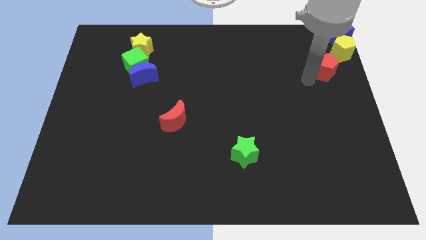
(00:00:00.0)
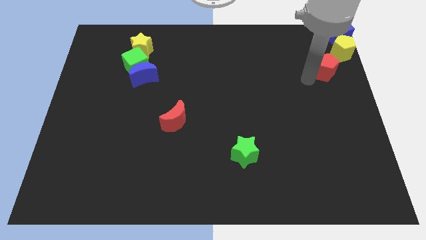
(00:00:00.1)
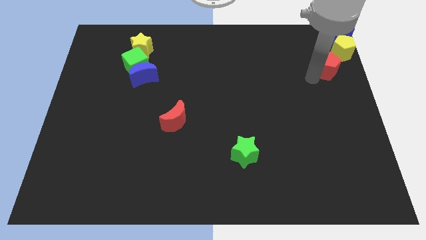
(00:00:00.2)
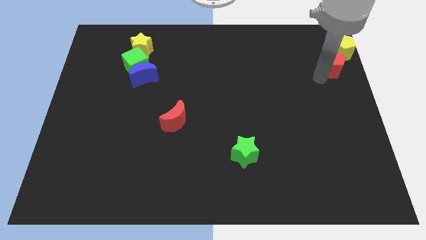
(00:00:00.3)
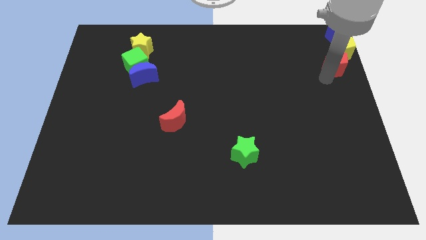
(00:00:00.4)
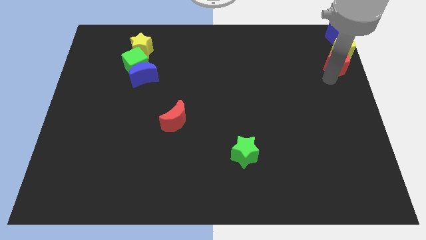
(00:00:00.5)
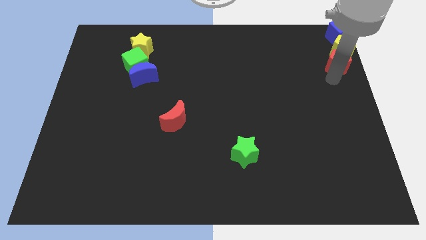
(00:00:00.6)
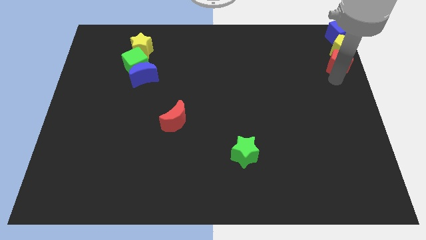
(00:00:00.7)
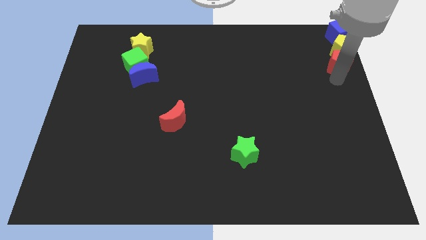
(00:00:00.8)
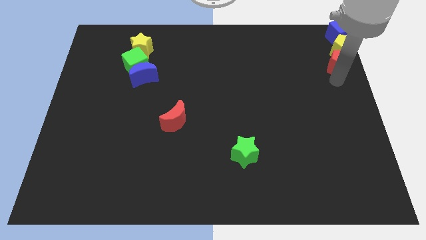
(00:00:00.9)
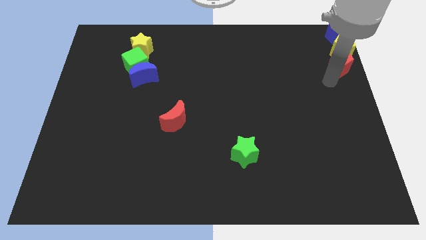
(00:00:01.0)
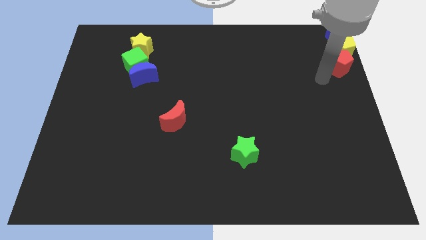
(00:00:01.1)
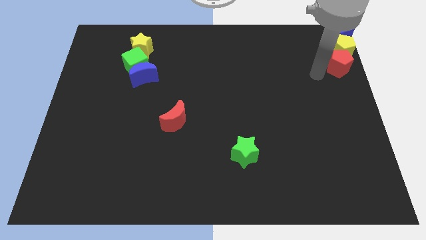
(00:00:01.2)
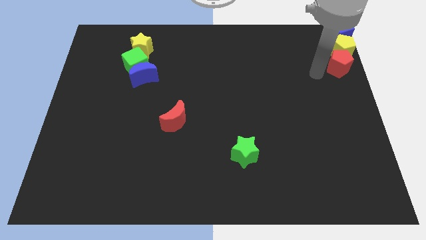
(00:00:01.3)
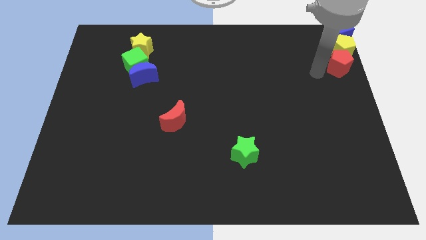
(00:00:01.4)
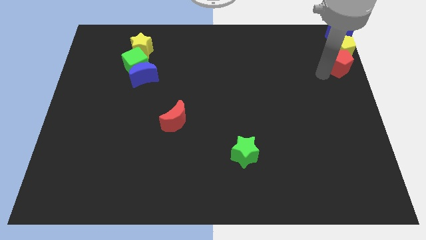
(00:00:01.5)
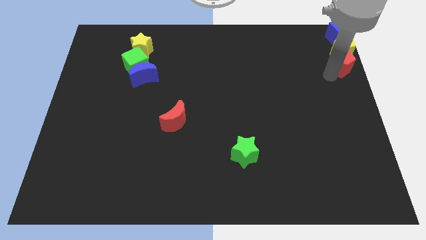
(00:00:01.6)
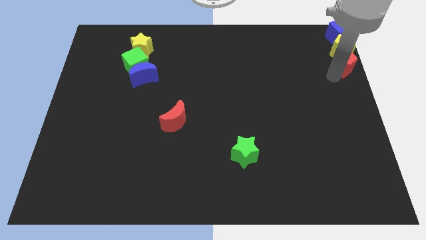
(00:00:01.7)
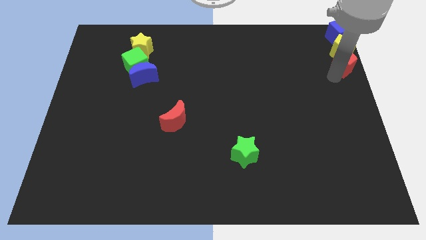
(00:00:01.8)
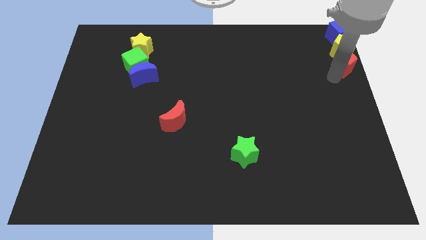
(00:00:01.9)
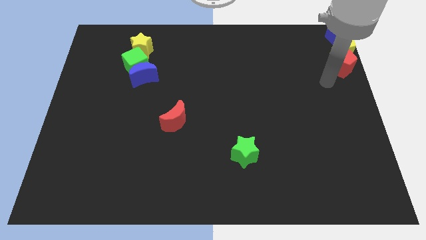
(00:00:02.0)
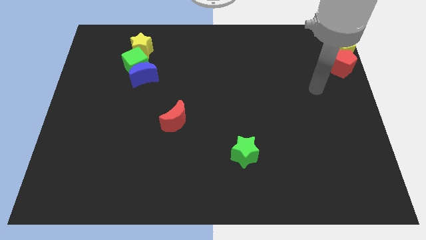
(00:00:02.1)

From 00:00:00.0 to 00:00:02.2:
place the red pentagon at the bottom of the yellow pentagon

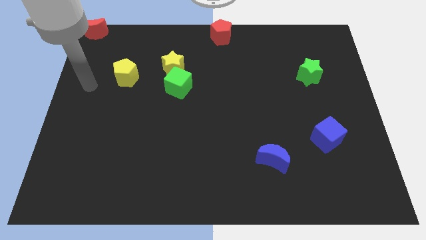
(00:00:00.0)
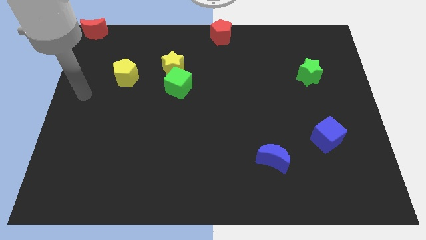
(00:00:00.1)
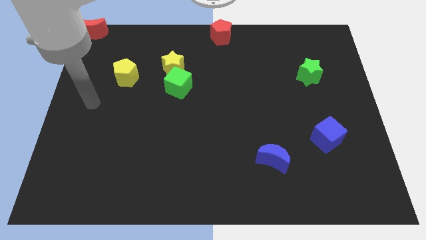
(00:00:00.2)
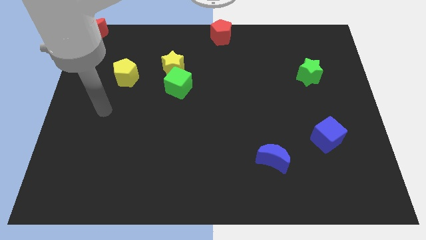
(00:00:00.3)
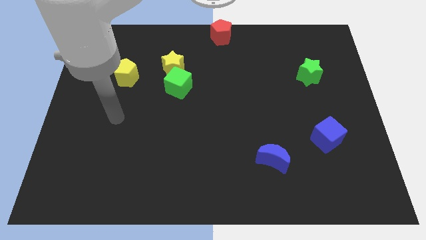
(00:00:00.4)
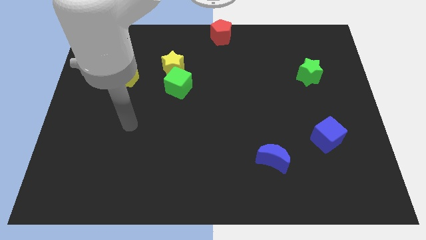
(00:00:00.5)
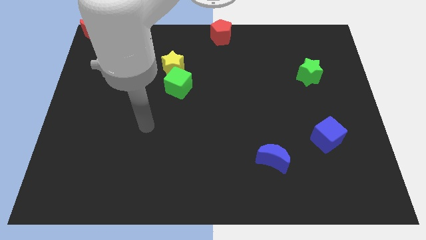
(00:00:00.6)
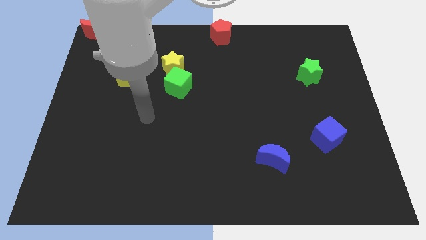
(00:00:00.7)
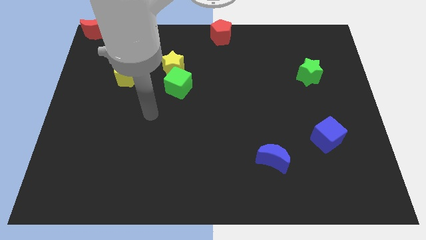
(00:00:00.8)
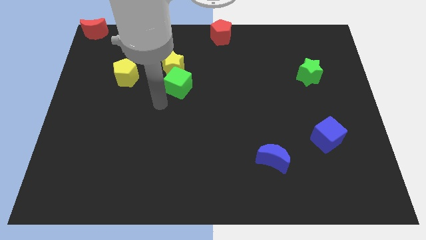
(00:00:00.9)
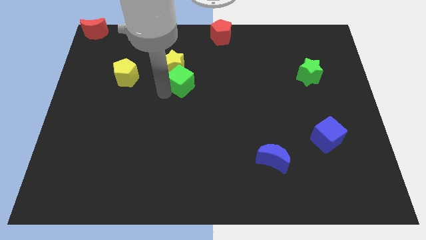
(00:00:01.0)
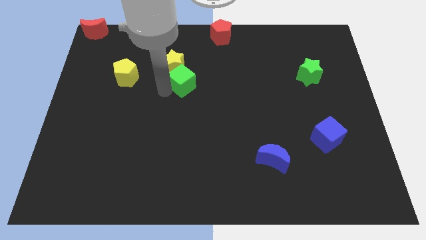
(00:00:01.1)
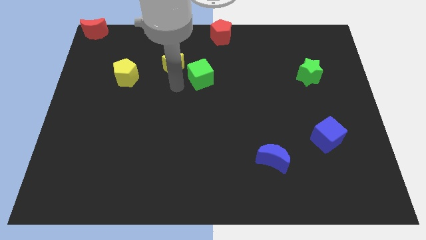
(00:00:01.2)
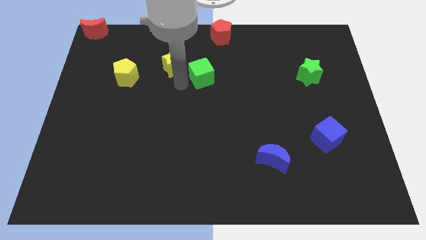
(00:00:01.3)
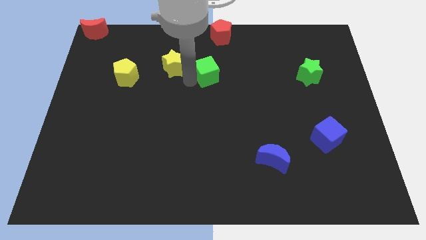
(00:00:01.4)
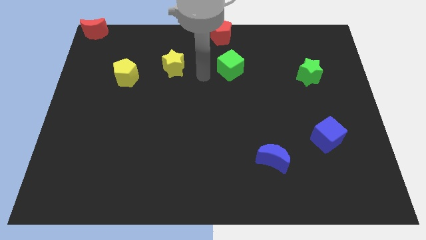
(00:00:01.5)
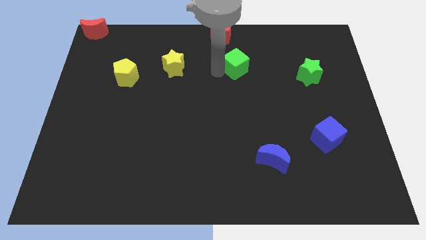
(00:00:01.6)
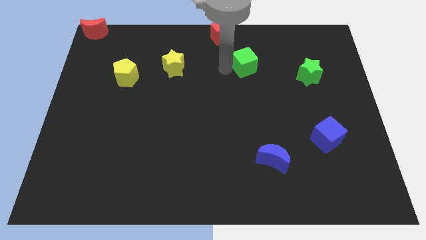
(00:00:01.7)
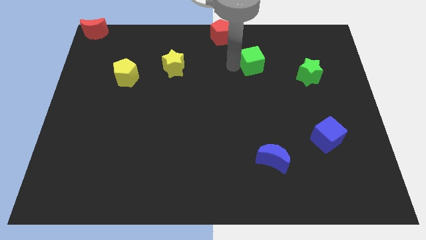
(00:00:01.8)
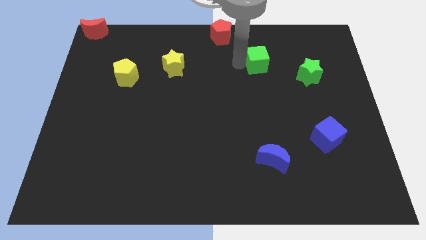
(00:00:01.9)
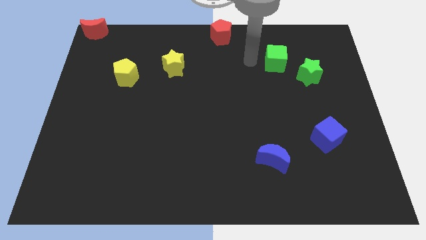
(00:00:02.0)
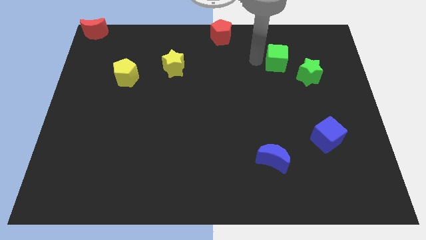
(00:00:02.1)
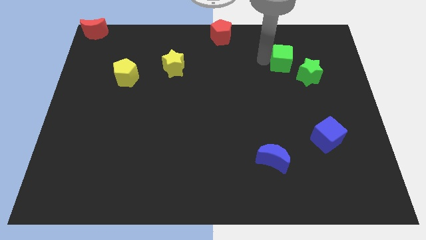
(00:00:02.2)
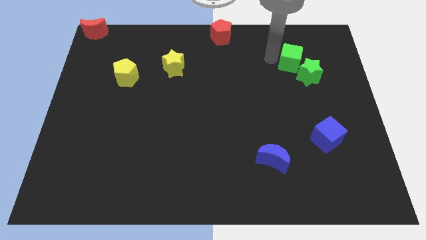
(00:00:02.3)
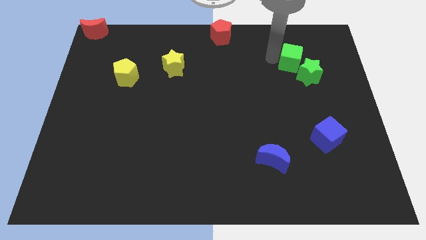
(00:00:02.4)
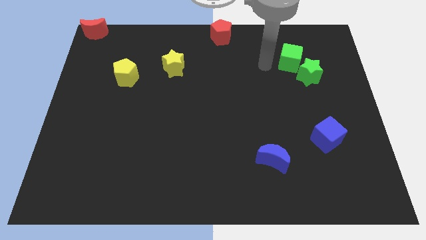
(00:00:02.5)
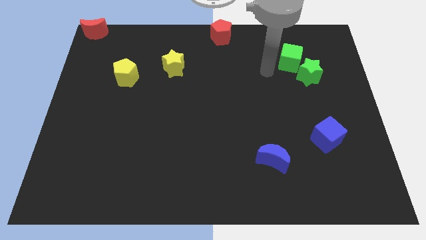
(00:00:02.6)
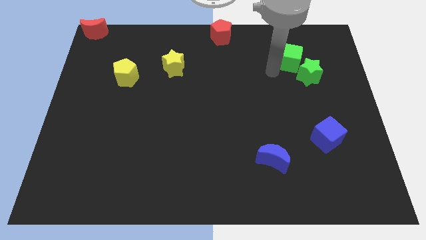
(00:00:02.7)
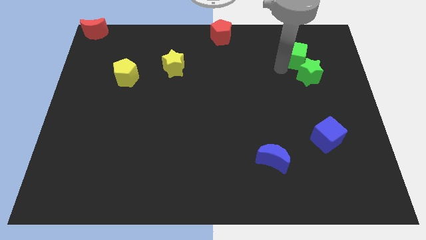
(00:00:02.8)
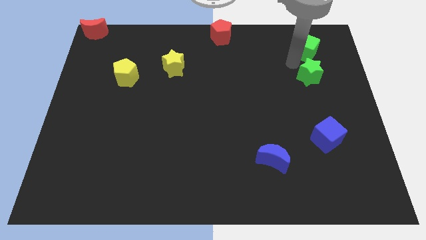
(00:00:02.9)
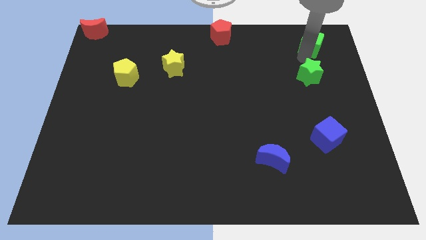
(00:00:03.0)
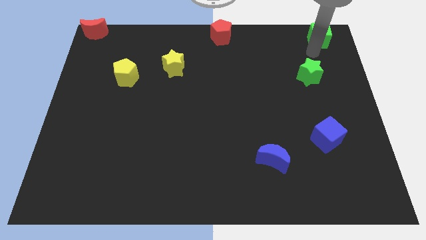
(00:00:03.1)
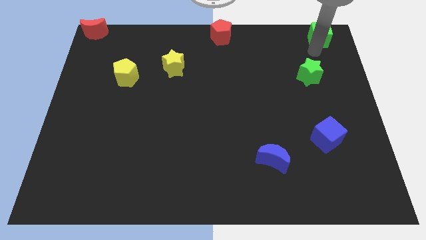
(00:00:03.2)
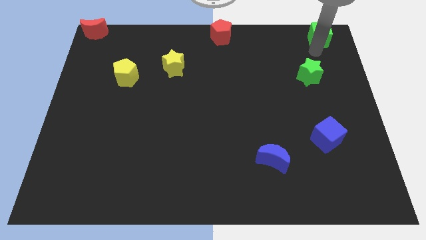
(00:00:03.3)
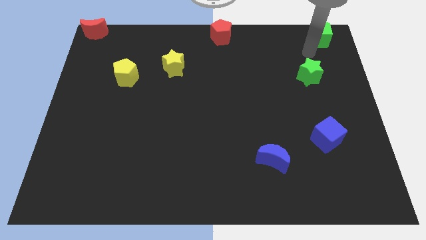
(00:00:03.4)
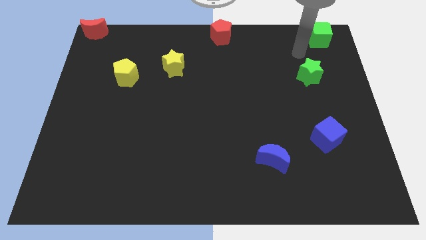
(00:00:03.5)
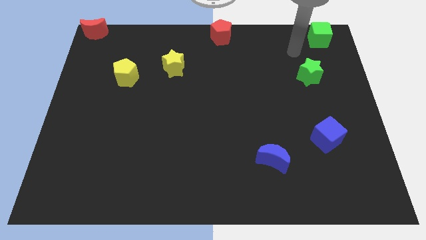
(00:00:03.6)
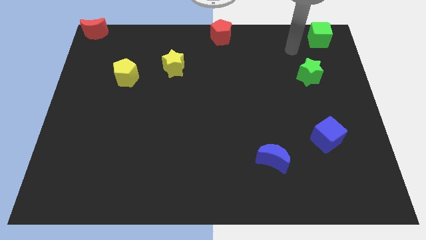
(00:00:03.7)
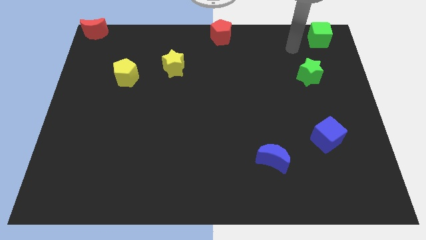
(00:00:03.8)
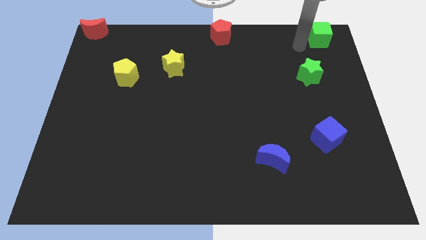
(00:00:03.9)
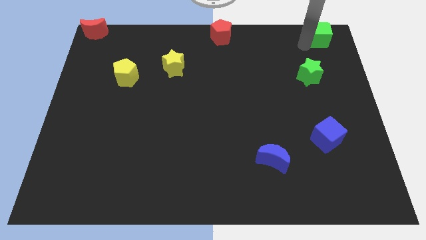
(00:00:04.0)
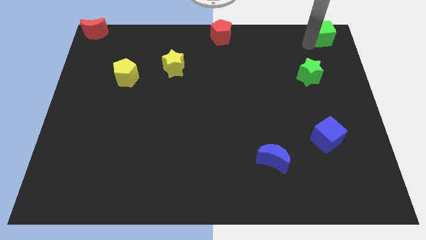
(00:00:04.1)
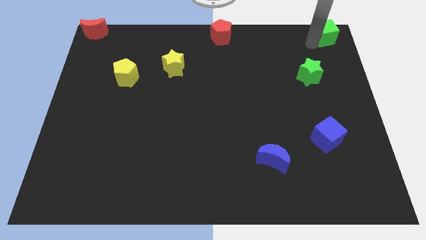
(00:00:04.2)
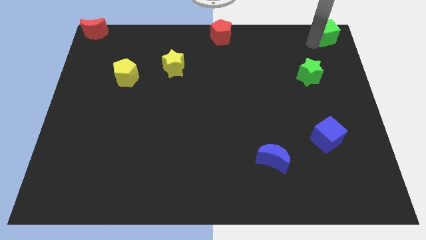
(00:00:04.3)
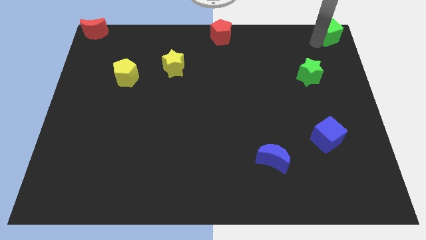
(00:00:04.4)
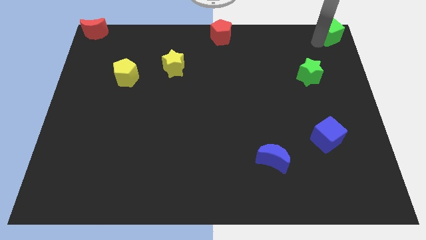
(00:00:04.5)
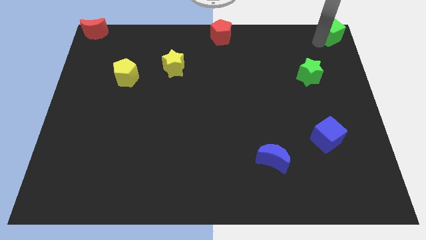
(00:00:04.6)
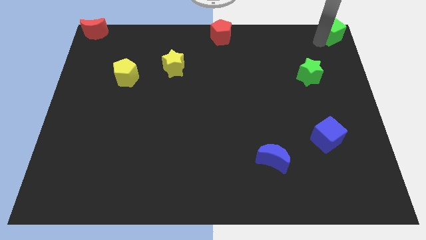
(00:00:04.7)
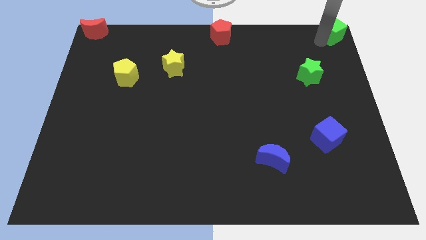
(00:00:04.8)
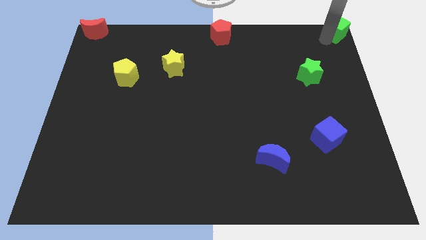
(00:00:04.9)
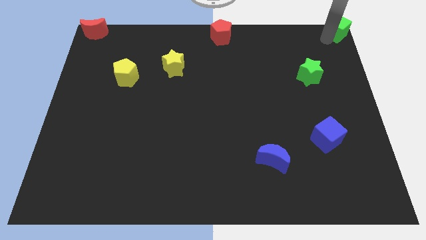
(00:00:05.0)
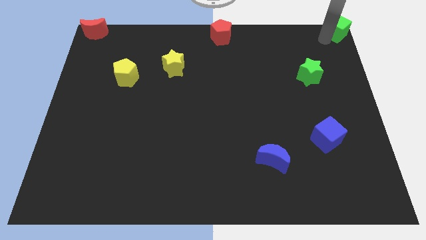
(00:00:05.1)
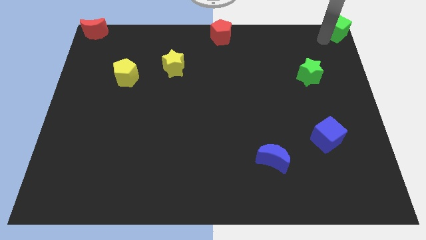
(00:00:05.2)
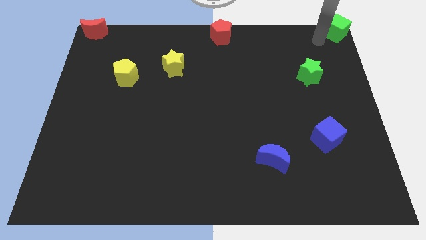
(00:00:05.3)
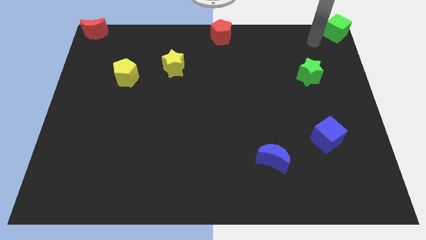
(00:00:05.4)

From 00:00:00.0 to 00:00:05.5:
place the green cube to the right of the red pentagon

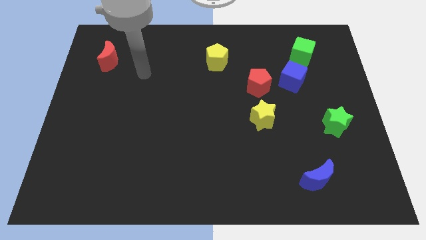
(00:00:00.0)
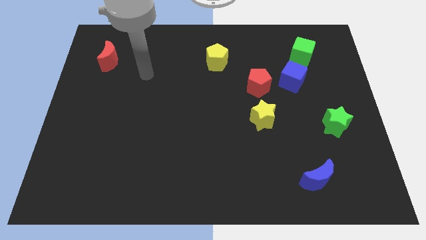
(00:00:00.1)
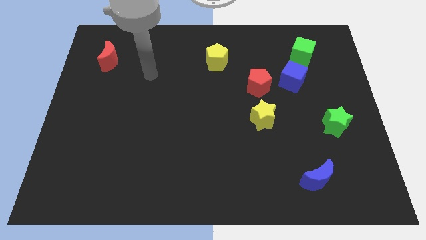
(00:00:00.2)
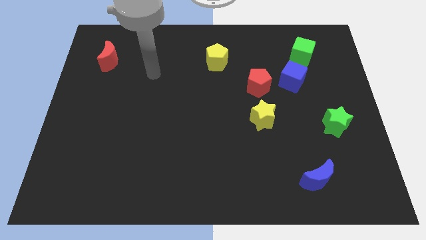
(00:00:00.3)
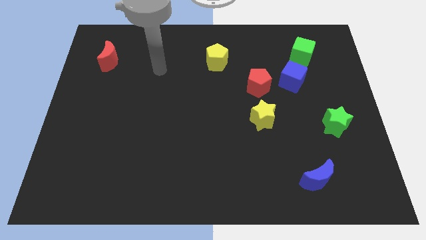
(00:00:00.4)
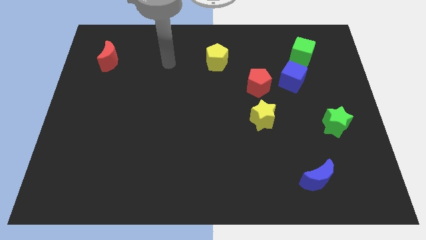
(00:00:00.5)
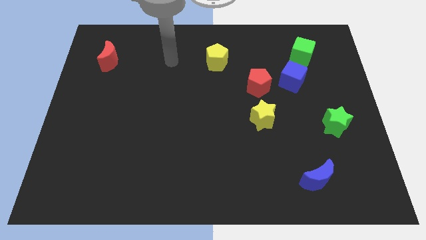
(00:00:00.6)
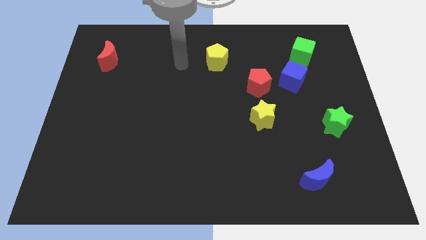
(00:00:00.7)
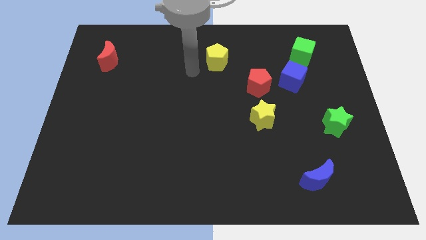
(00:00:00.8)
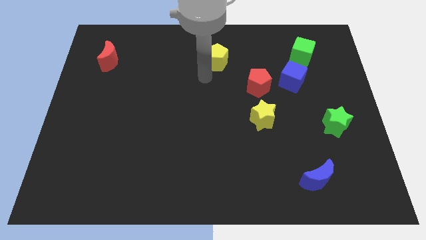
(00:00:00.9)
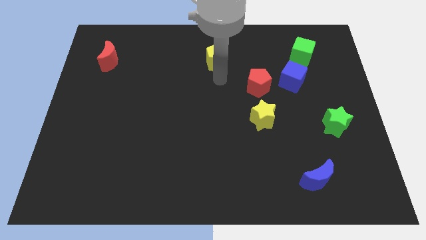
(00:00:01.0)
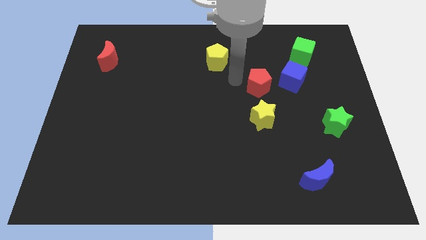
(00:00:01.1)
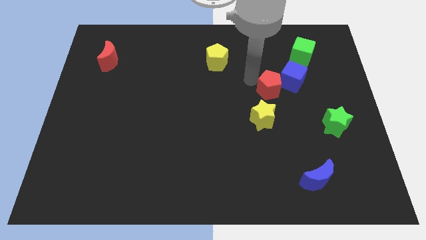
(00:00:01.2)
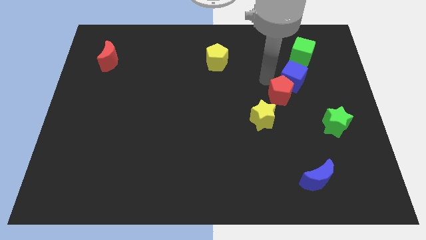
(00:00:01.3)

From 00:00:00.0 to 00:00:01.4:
move your arm towards the red pentagon
